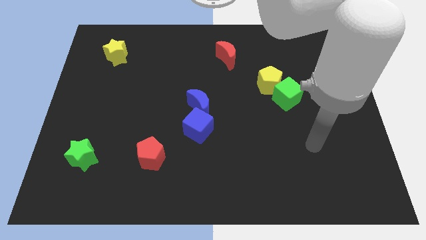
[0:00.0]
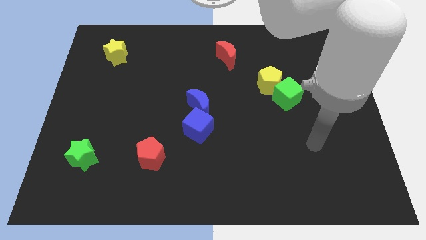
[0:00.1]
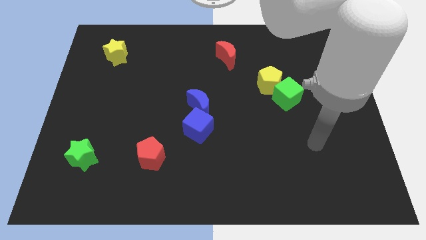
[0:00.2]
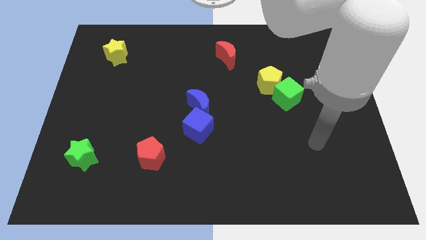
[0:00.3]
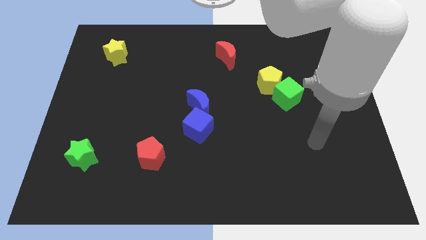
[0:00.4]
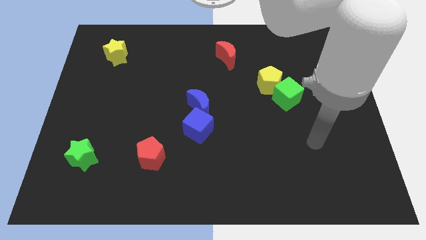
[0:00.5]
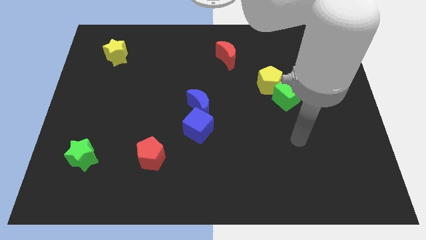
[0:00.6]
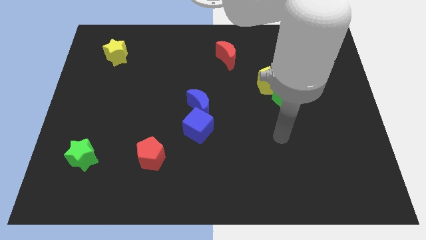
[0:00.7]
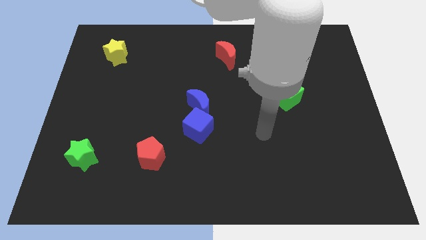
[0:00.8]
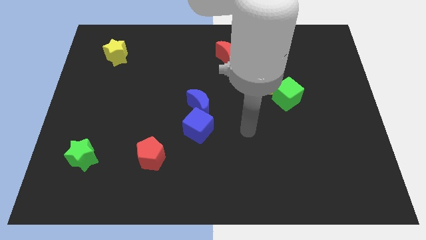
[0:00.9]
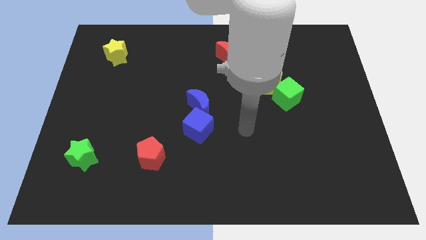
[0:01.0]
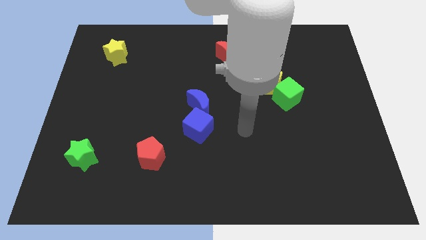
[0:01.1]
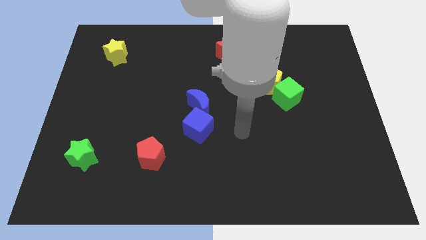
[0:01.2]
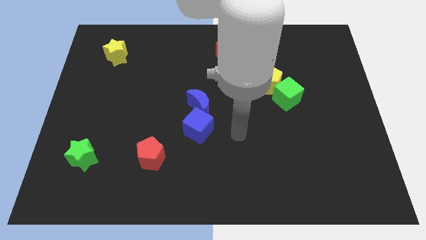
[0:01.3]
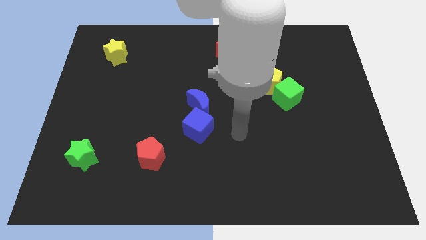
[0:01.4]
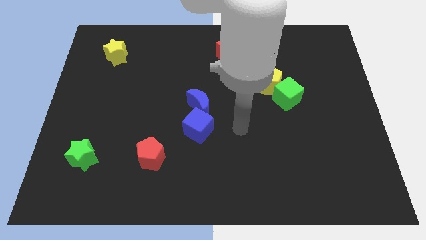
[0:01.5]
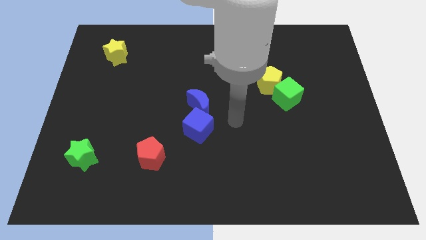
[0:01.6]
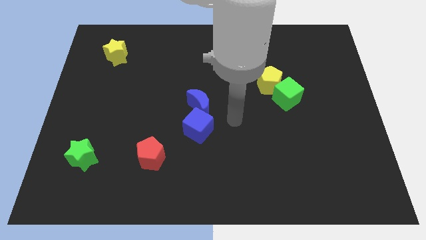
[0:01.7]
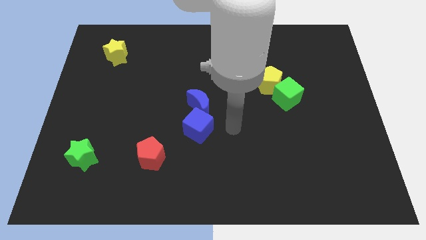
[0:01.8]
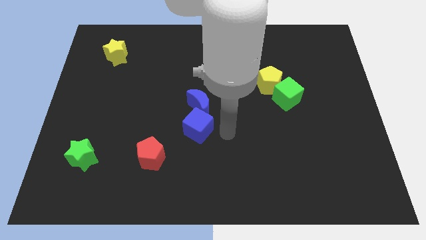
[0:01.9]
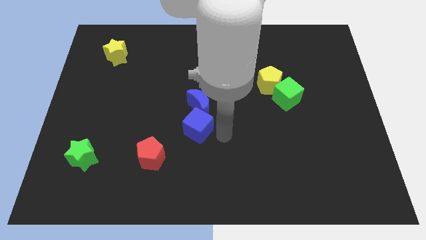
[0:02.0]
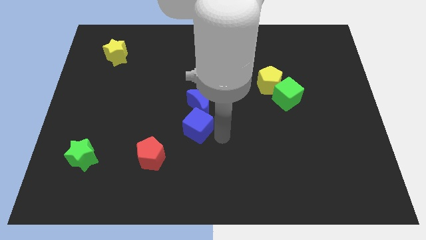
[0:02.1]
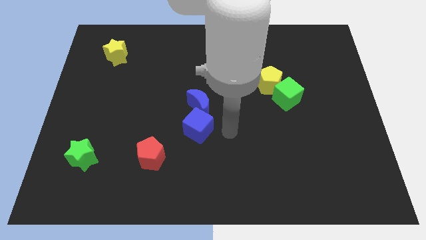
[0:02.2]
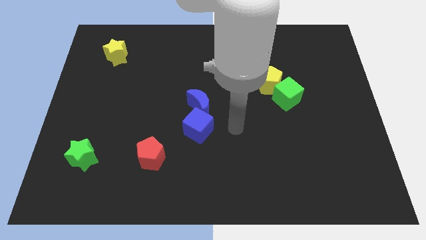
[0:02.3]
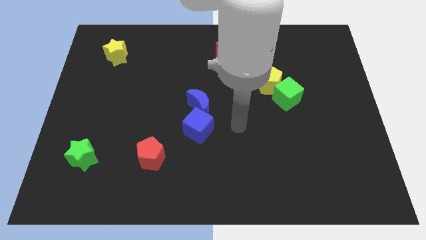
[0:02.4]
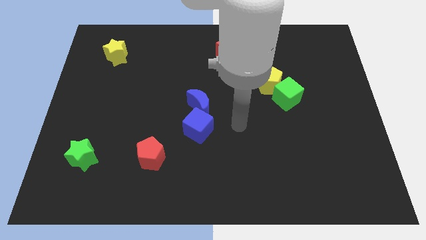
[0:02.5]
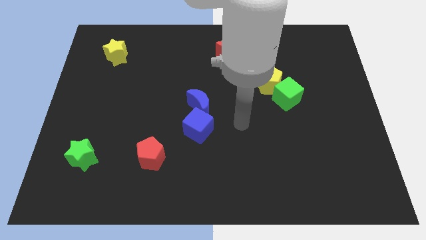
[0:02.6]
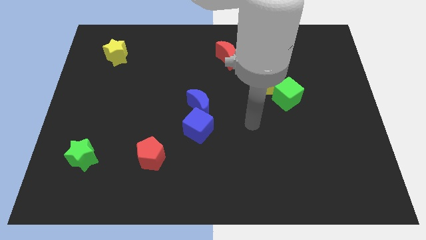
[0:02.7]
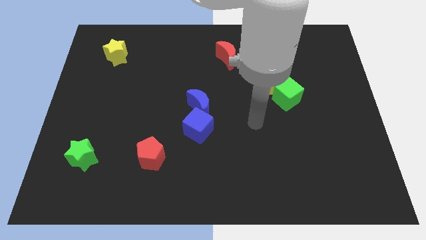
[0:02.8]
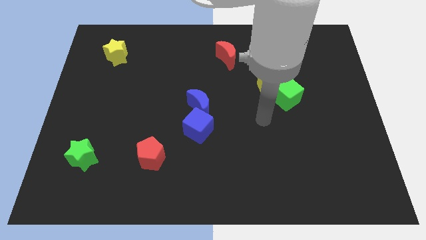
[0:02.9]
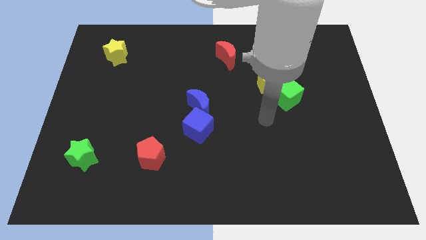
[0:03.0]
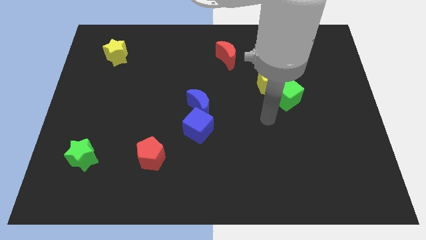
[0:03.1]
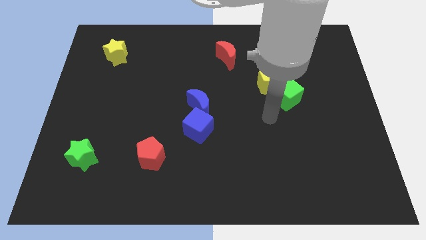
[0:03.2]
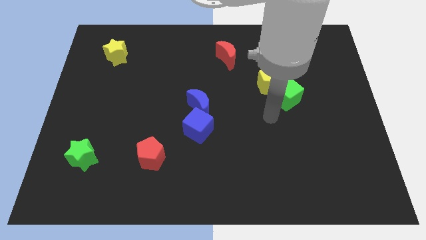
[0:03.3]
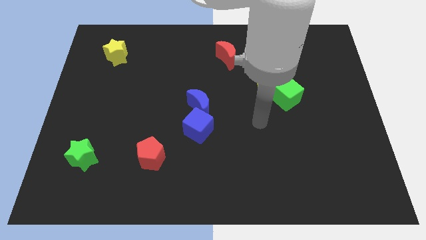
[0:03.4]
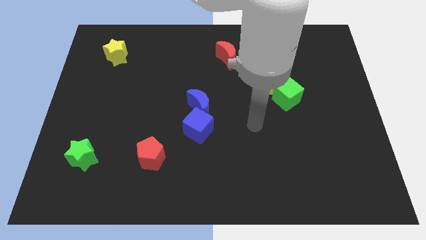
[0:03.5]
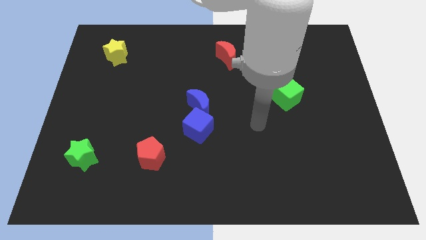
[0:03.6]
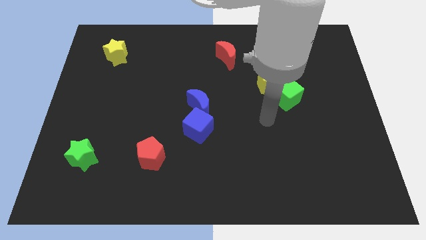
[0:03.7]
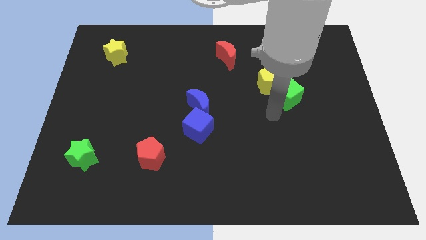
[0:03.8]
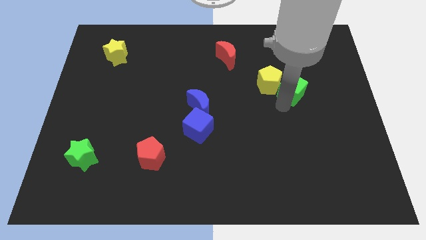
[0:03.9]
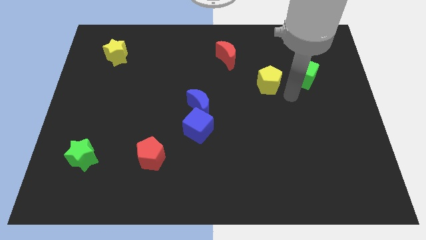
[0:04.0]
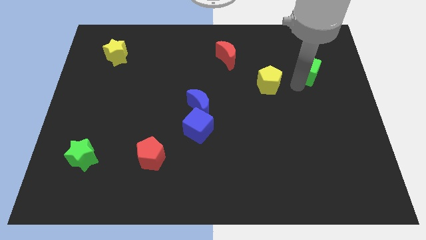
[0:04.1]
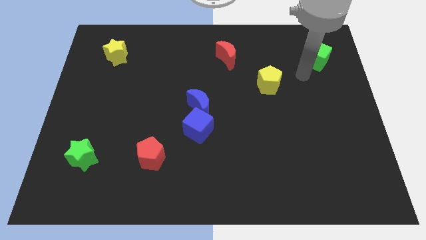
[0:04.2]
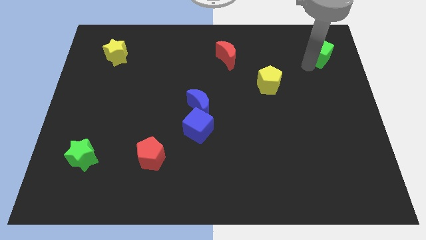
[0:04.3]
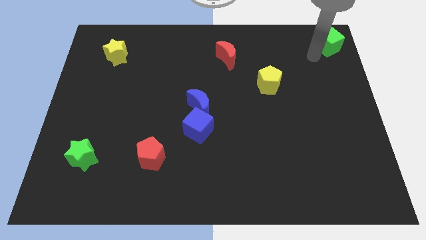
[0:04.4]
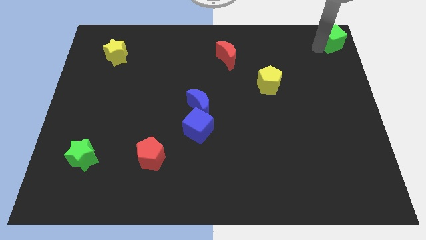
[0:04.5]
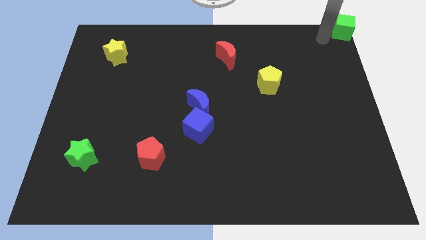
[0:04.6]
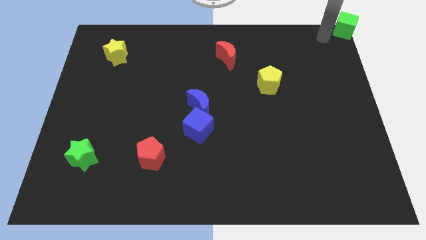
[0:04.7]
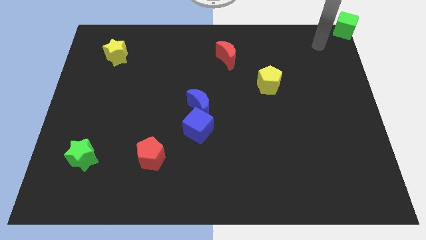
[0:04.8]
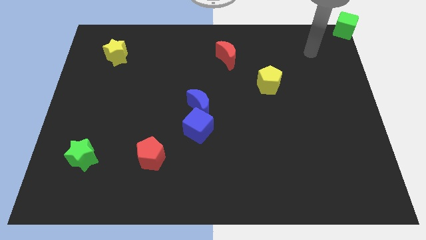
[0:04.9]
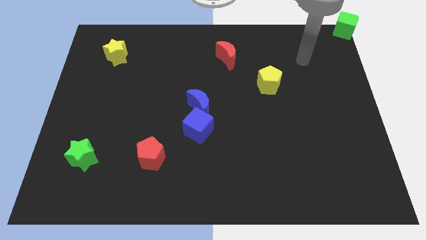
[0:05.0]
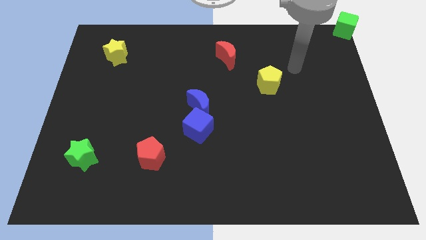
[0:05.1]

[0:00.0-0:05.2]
push green cube to right top corner of the board

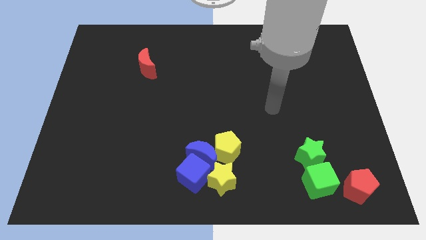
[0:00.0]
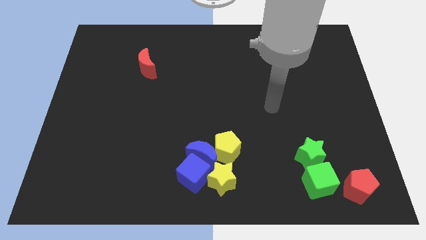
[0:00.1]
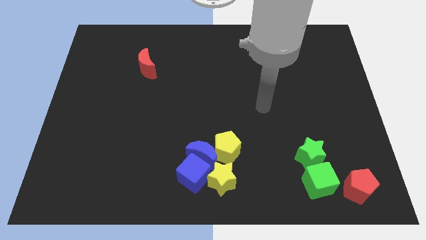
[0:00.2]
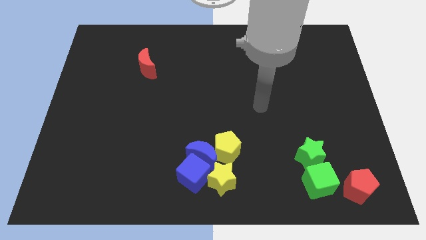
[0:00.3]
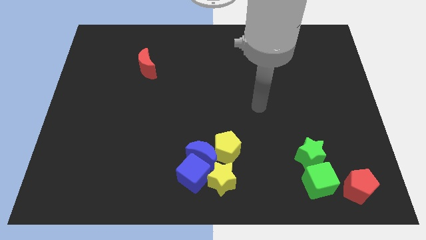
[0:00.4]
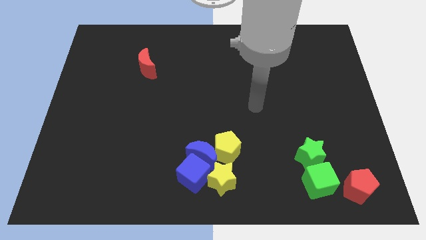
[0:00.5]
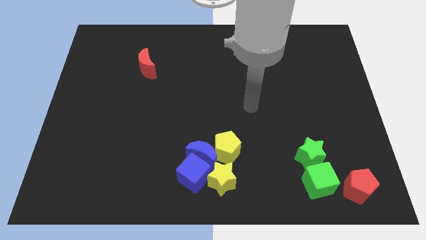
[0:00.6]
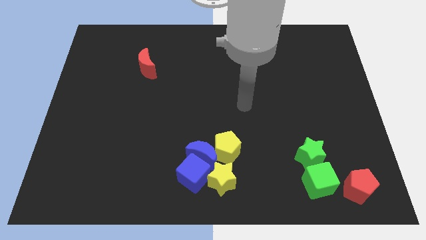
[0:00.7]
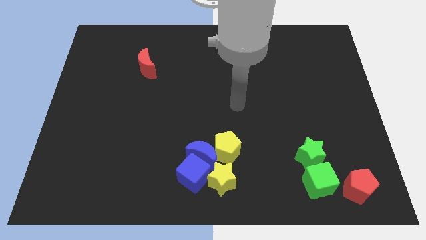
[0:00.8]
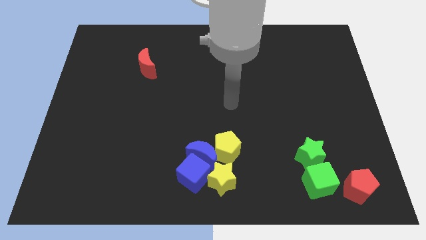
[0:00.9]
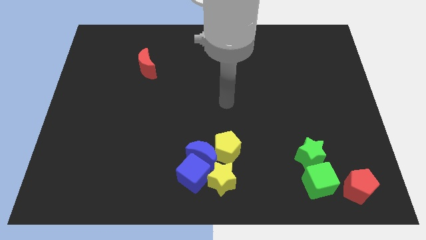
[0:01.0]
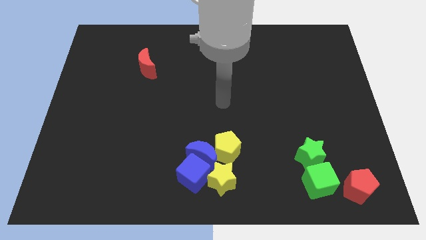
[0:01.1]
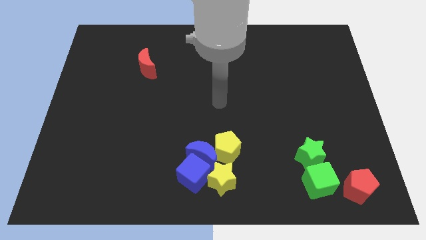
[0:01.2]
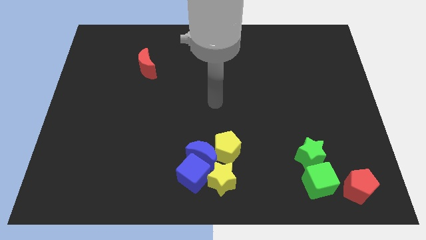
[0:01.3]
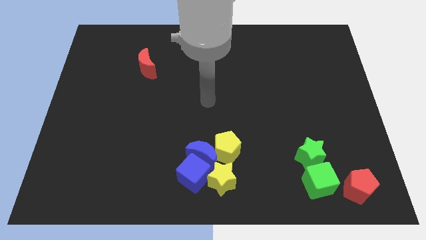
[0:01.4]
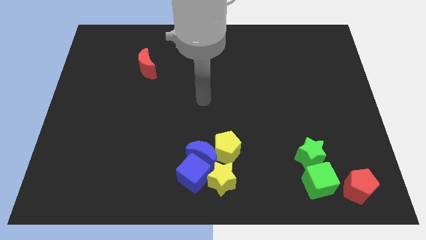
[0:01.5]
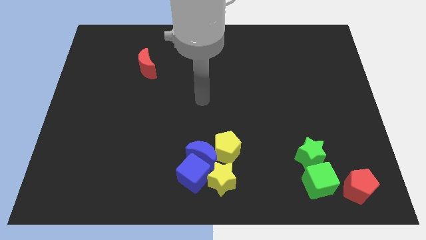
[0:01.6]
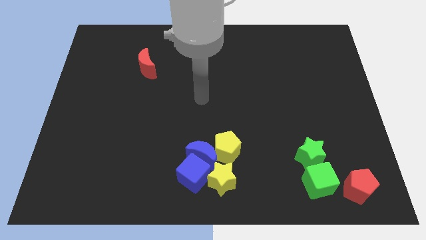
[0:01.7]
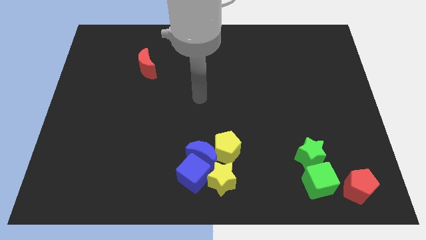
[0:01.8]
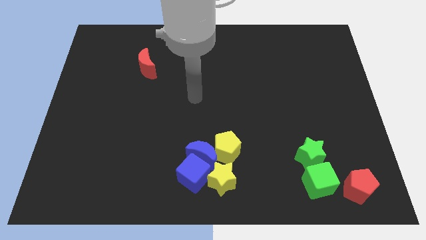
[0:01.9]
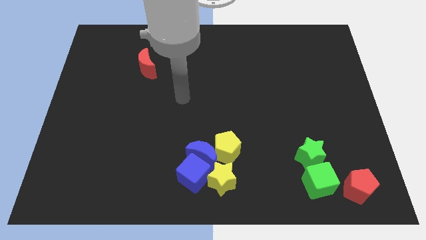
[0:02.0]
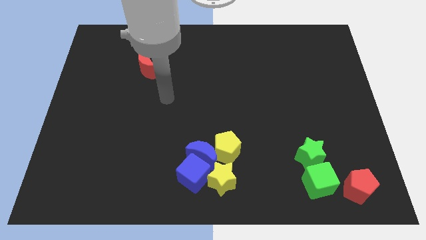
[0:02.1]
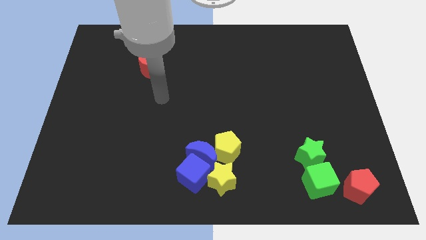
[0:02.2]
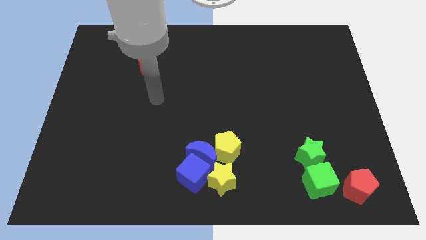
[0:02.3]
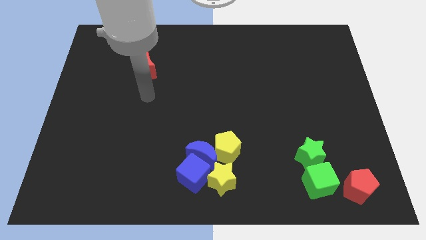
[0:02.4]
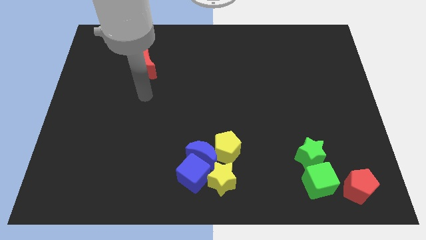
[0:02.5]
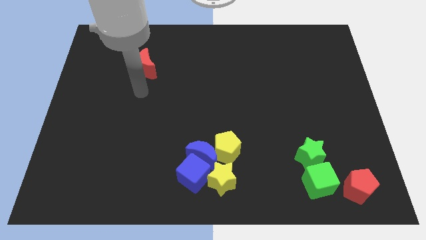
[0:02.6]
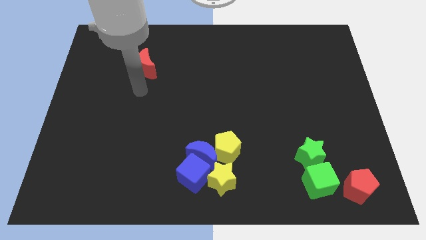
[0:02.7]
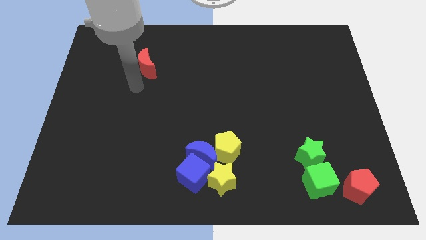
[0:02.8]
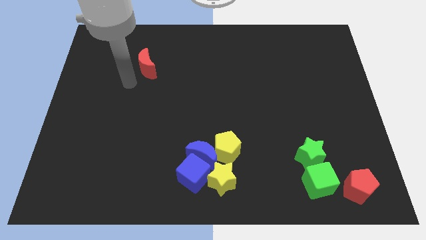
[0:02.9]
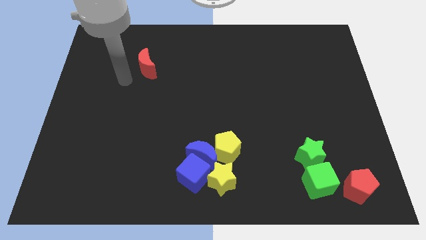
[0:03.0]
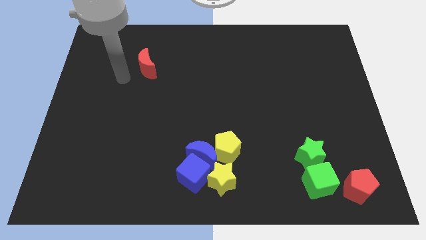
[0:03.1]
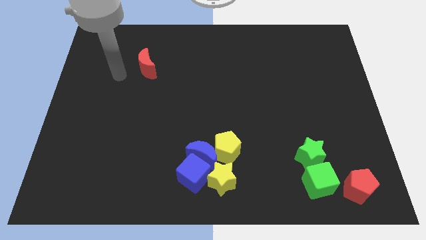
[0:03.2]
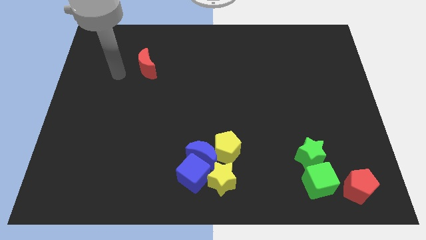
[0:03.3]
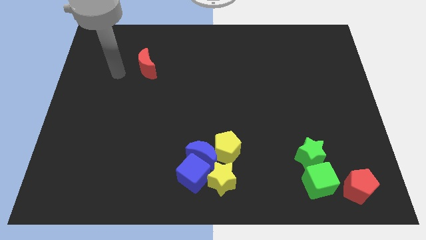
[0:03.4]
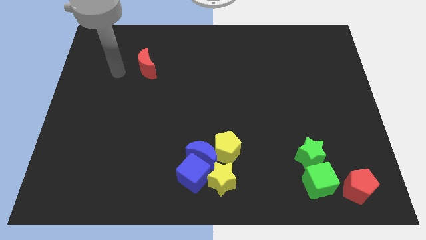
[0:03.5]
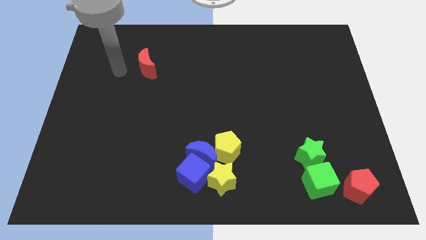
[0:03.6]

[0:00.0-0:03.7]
go and point your hand at the left of the red crescent

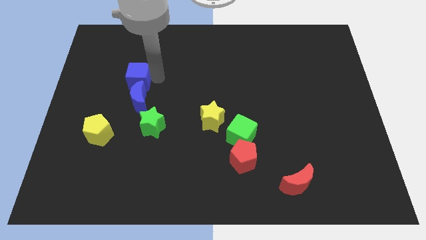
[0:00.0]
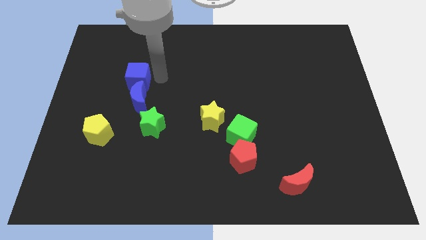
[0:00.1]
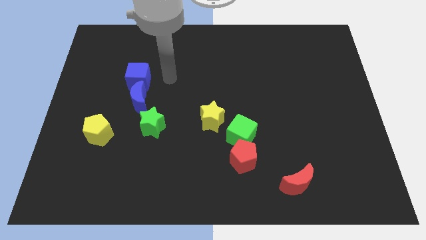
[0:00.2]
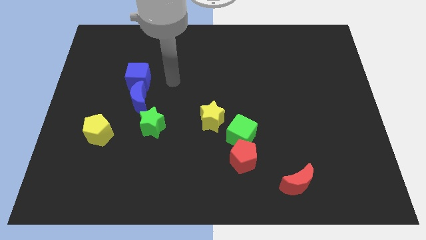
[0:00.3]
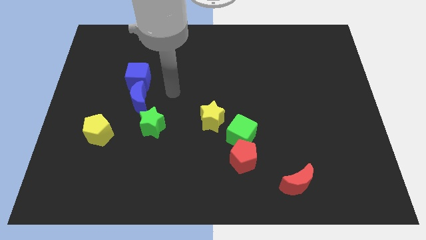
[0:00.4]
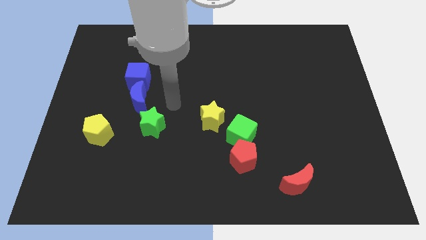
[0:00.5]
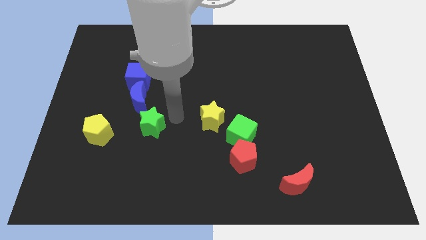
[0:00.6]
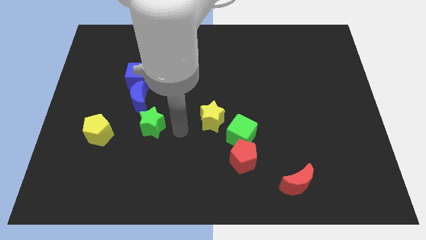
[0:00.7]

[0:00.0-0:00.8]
place the arm in between the green and yellow stars
